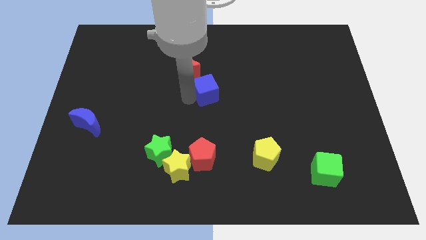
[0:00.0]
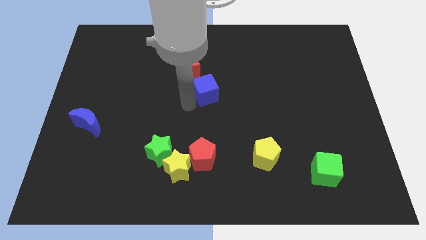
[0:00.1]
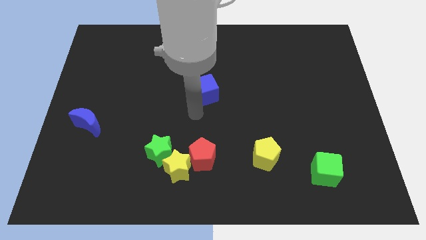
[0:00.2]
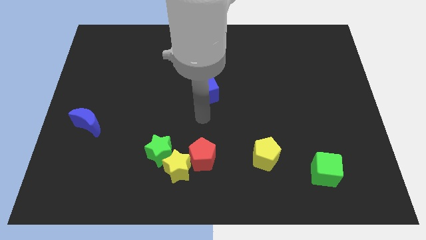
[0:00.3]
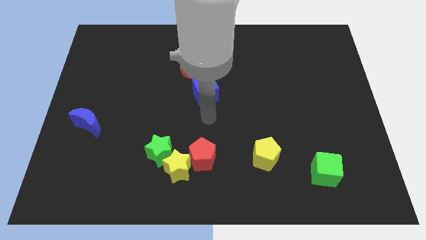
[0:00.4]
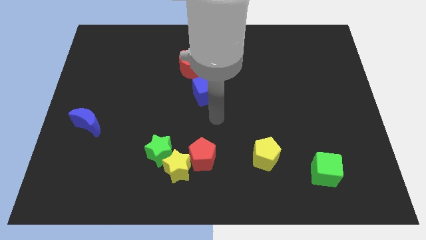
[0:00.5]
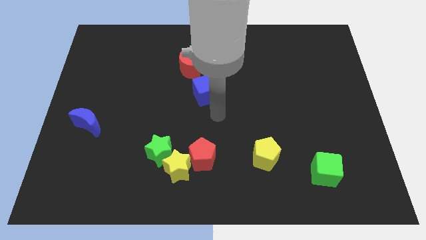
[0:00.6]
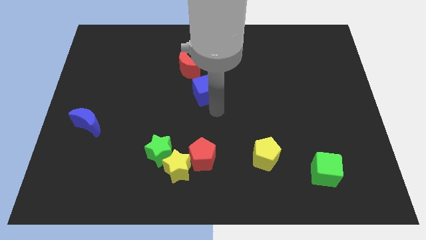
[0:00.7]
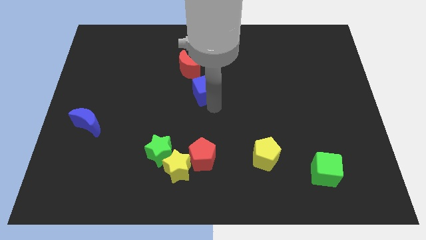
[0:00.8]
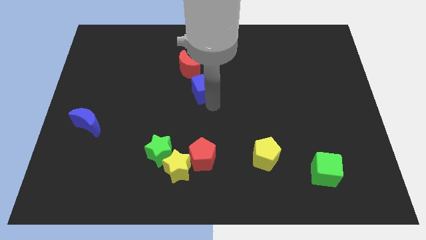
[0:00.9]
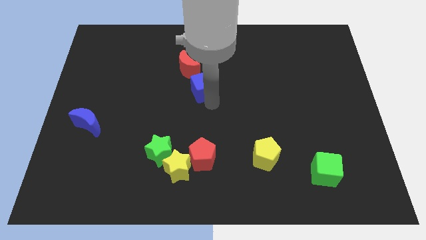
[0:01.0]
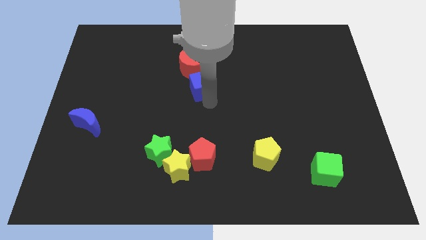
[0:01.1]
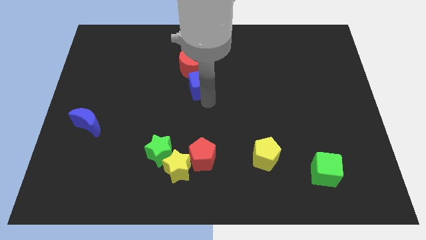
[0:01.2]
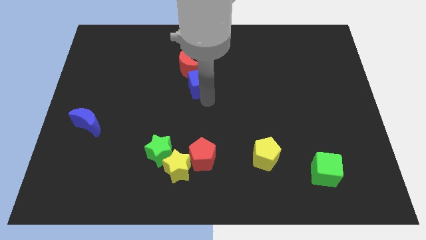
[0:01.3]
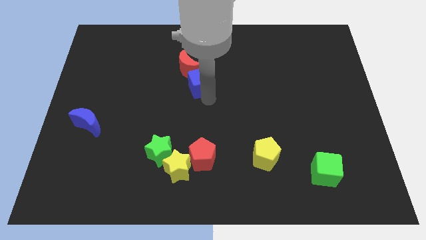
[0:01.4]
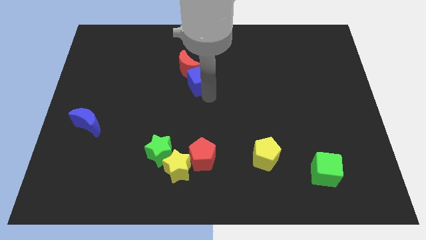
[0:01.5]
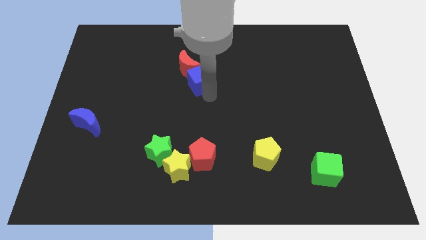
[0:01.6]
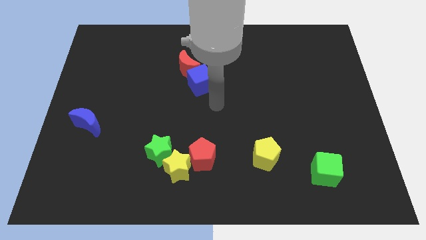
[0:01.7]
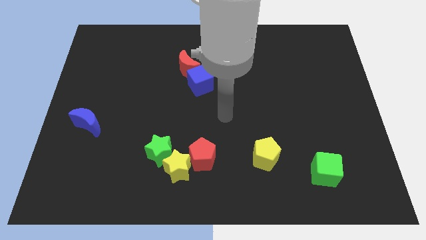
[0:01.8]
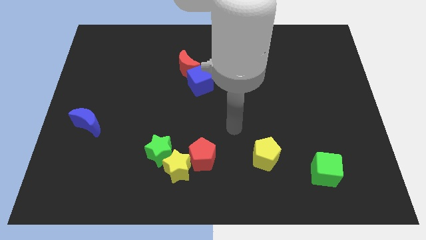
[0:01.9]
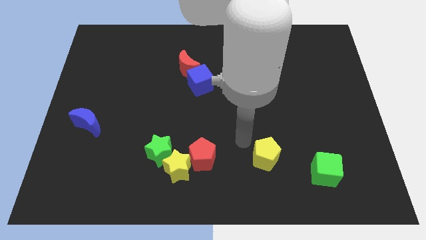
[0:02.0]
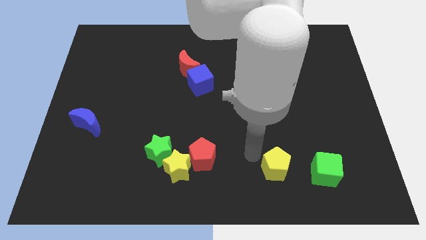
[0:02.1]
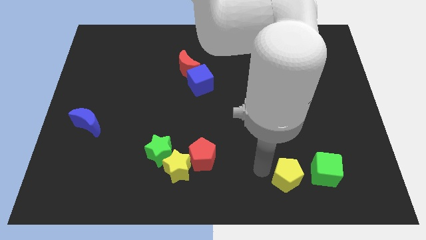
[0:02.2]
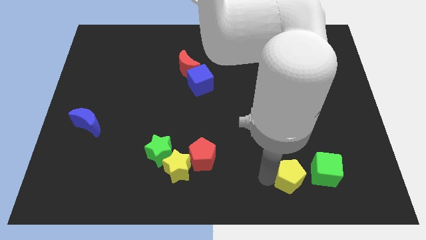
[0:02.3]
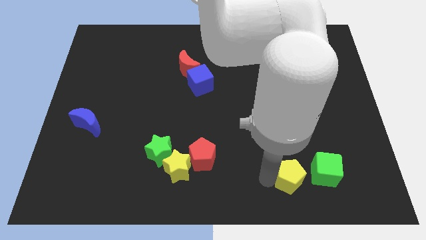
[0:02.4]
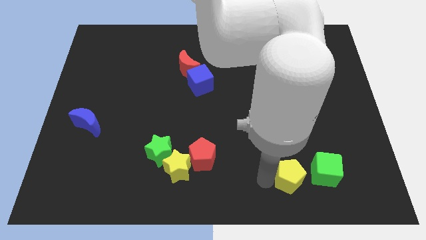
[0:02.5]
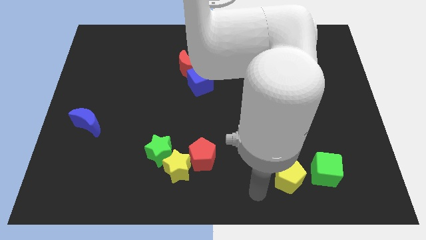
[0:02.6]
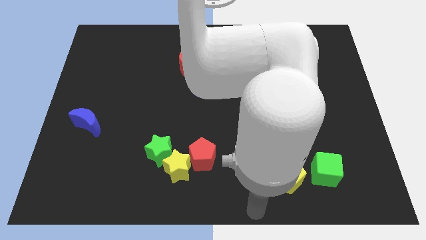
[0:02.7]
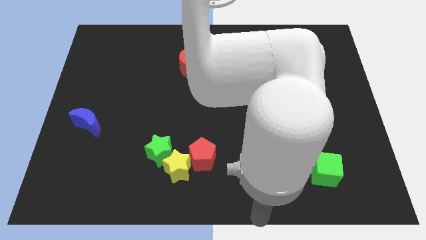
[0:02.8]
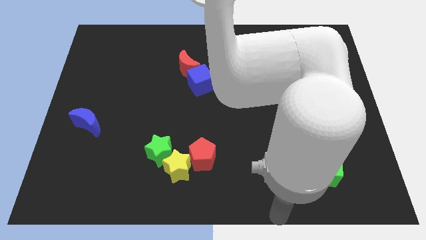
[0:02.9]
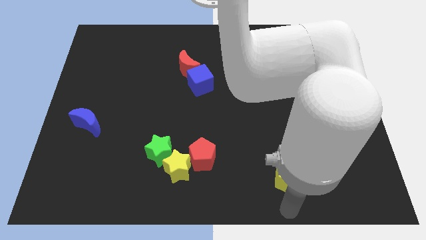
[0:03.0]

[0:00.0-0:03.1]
place the yellow pentagon to the left of the green cube

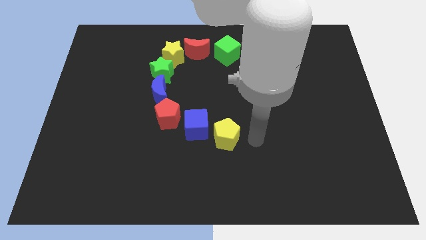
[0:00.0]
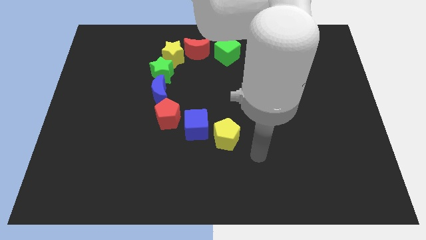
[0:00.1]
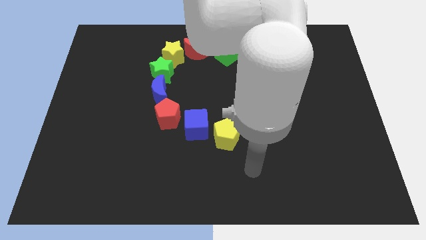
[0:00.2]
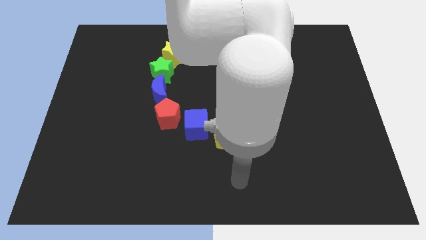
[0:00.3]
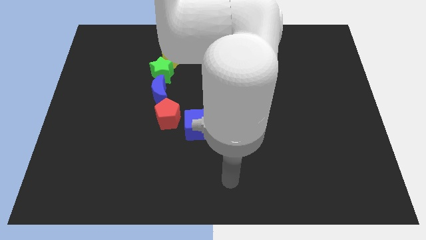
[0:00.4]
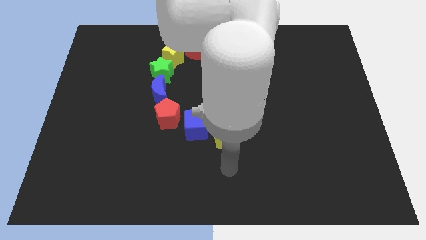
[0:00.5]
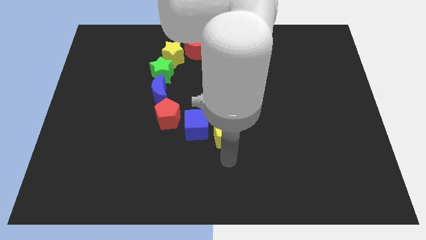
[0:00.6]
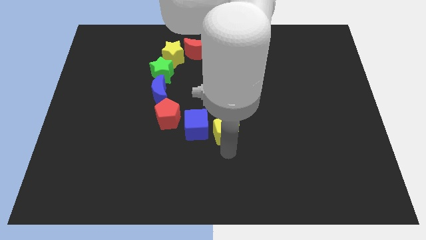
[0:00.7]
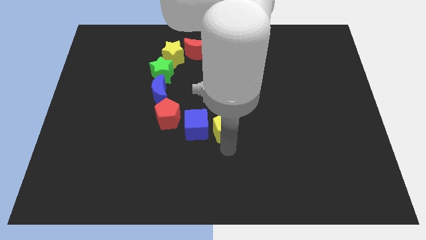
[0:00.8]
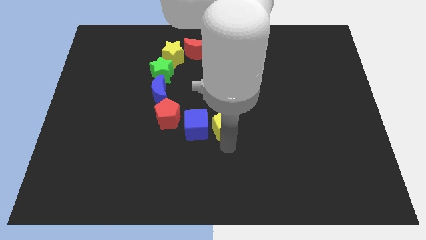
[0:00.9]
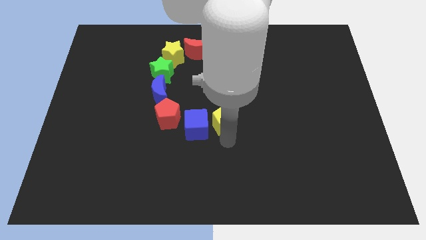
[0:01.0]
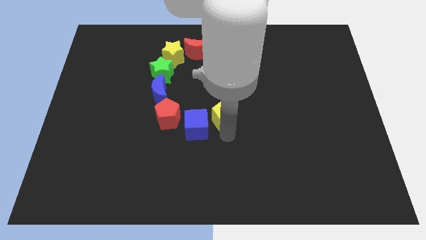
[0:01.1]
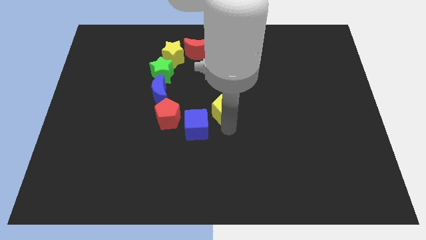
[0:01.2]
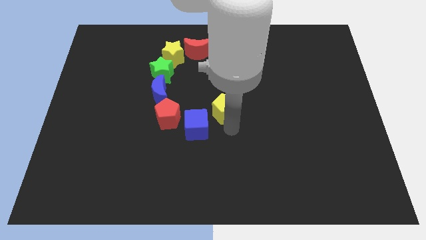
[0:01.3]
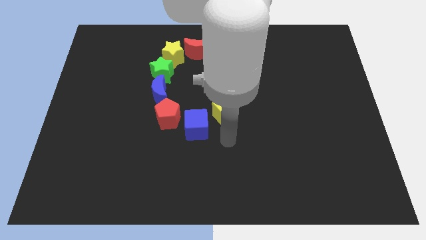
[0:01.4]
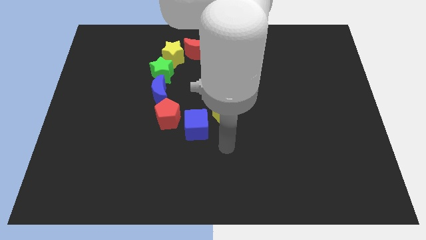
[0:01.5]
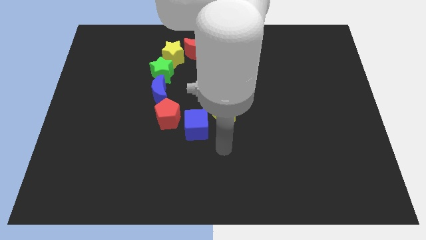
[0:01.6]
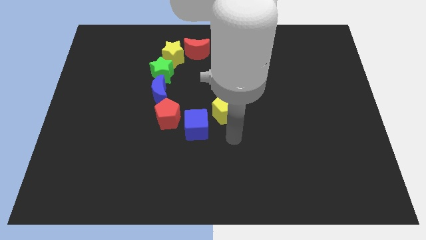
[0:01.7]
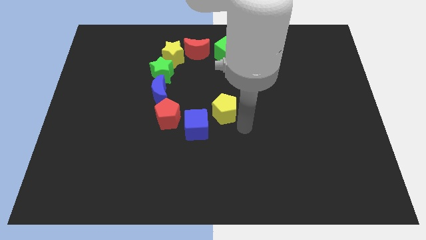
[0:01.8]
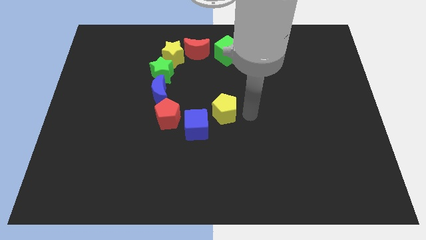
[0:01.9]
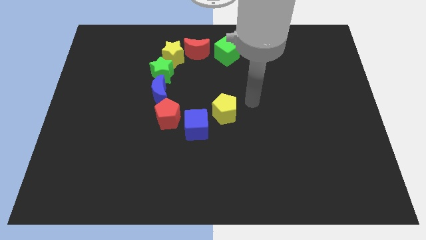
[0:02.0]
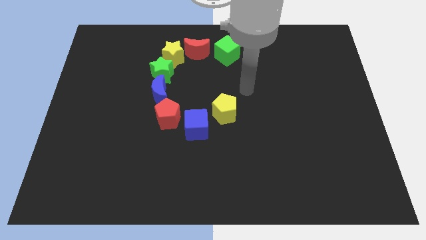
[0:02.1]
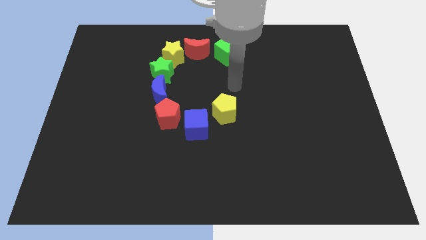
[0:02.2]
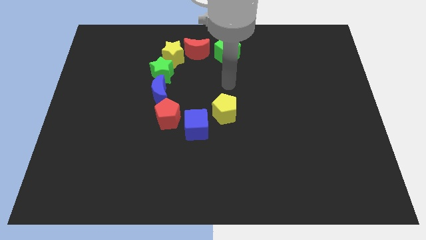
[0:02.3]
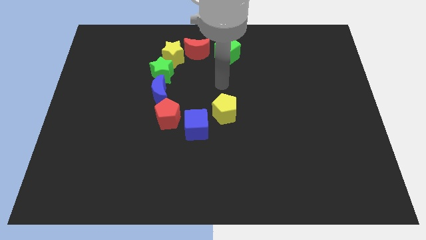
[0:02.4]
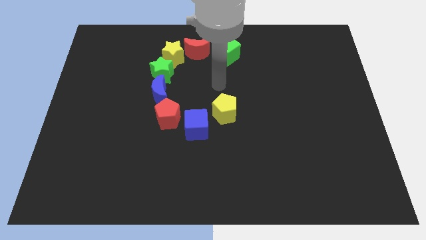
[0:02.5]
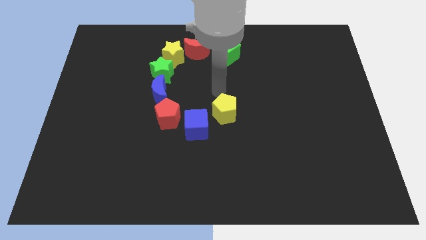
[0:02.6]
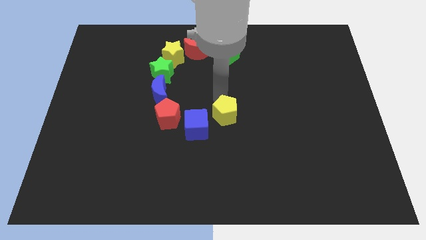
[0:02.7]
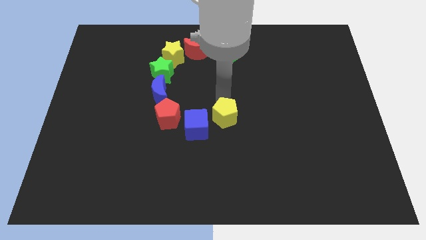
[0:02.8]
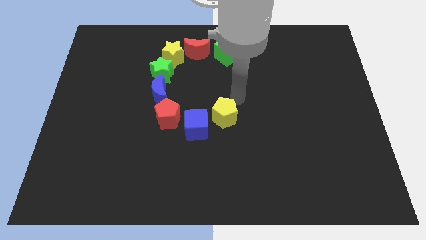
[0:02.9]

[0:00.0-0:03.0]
move the yellow pentagon to the top right of the blue cube

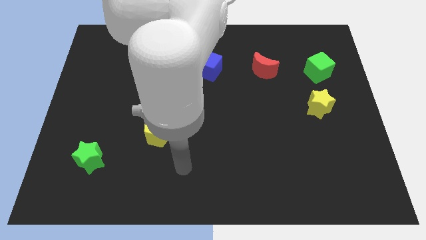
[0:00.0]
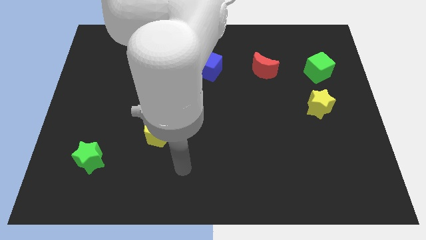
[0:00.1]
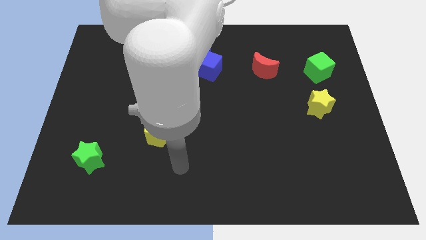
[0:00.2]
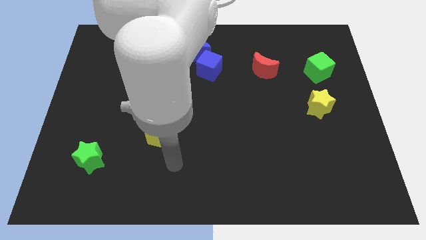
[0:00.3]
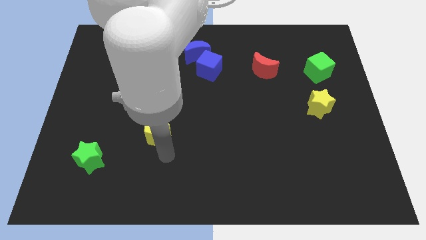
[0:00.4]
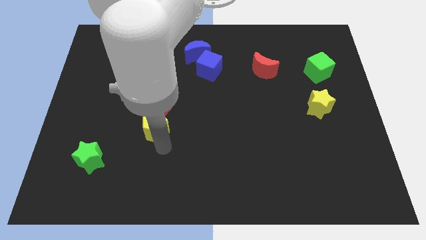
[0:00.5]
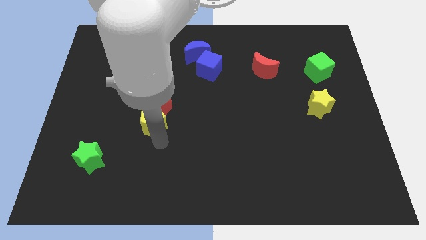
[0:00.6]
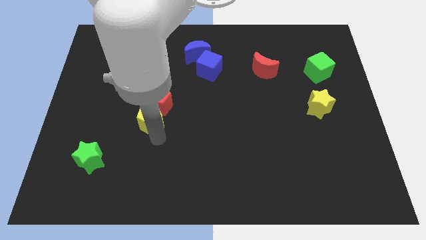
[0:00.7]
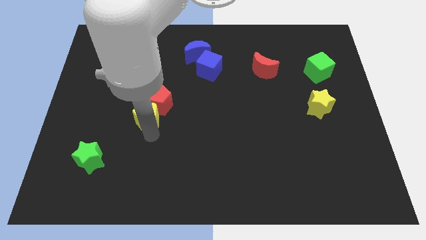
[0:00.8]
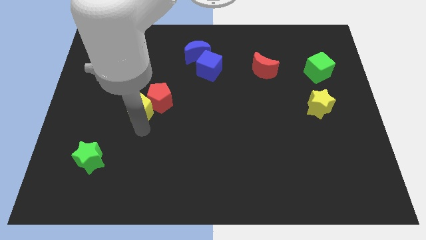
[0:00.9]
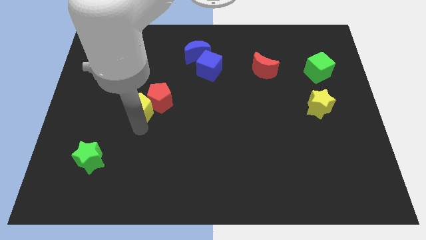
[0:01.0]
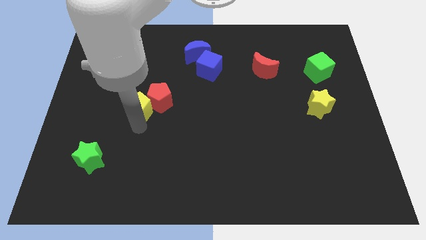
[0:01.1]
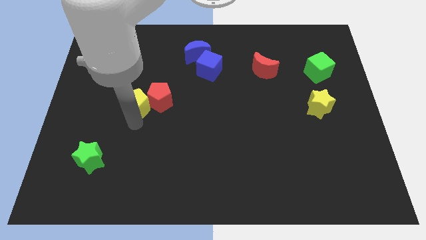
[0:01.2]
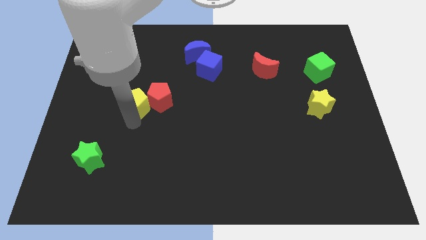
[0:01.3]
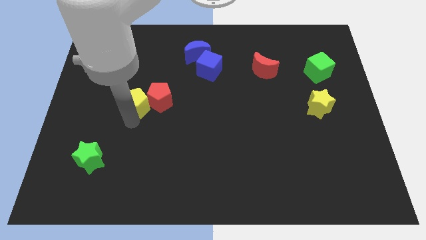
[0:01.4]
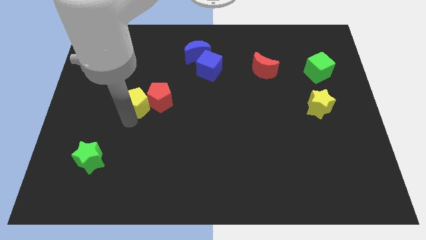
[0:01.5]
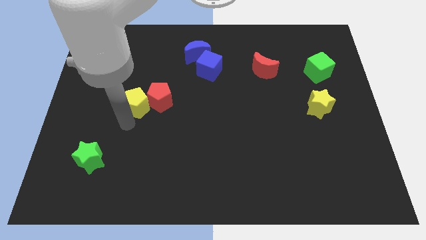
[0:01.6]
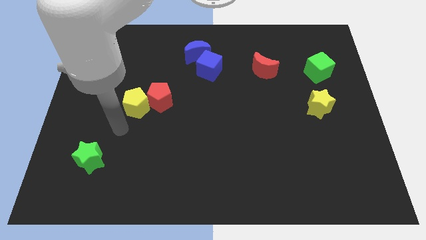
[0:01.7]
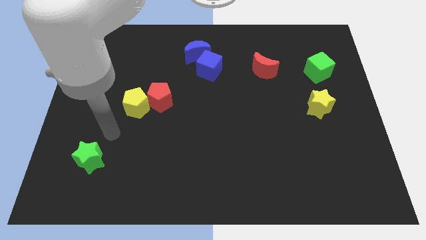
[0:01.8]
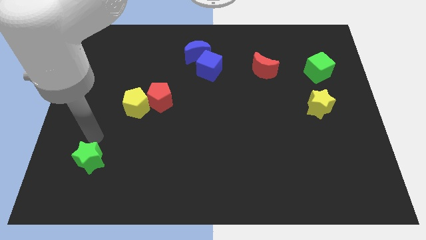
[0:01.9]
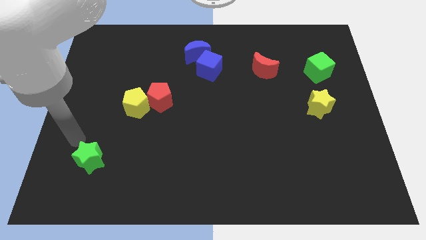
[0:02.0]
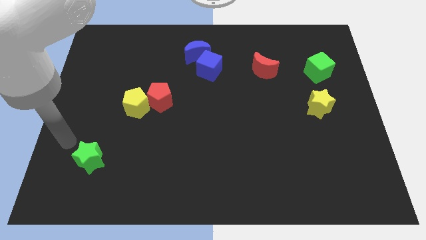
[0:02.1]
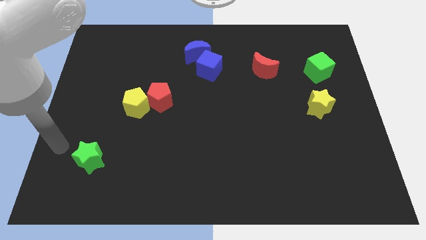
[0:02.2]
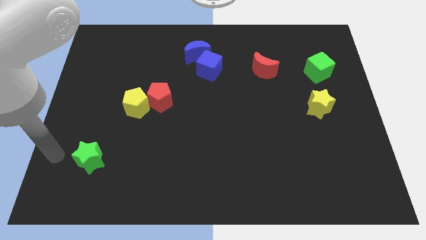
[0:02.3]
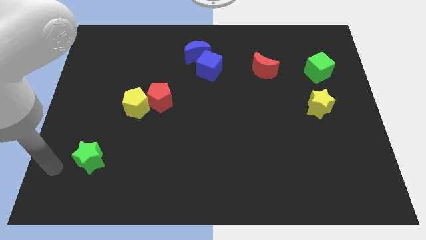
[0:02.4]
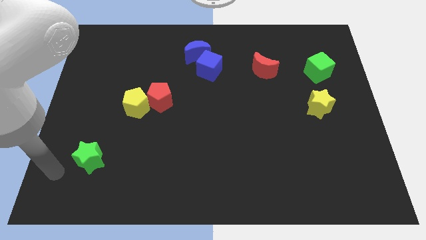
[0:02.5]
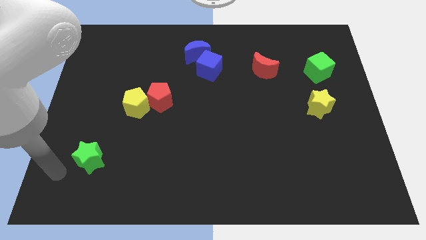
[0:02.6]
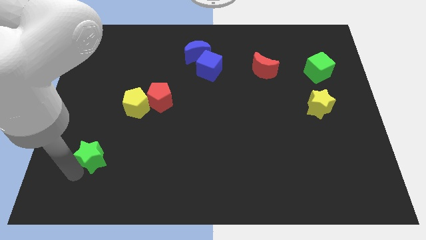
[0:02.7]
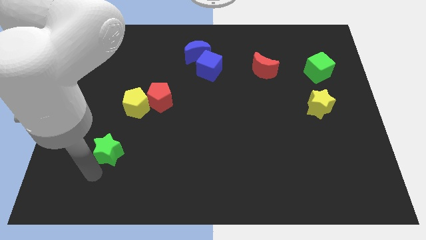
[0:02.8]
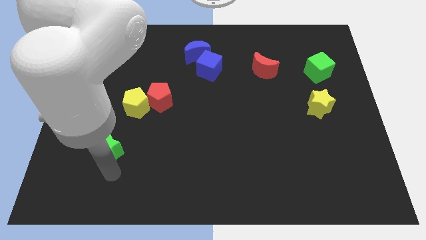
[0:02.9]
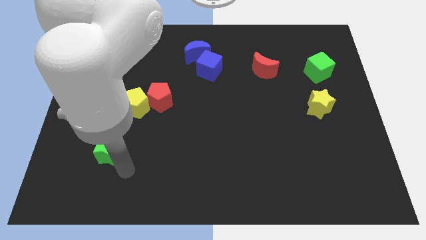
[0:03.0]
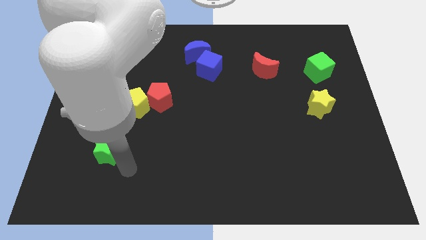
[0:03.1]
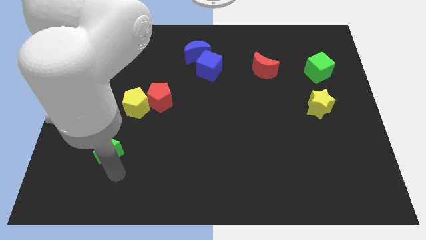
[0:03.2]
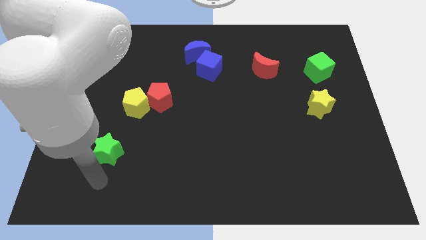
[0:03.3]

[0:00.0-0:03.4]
push the yellow pentagon into red pentagon
